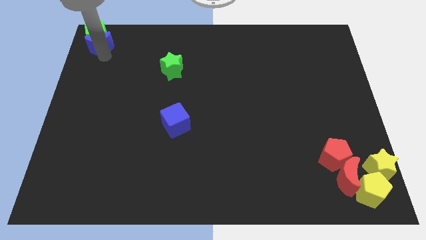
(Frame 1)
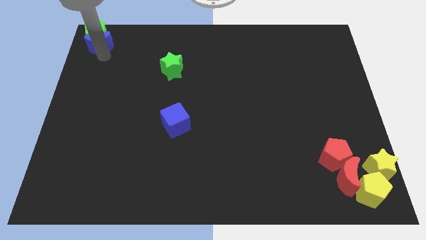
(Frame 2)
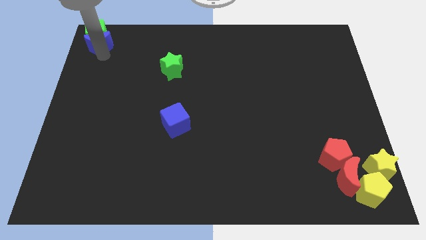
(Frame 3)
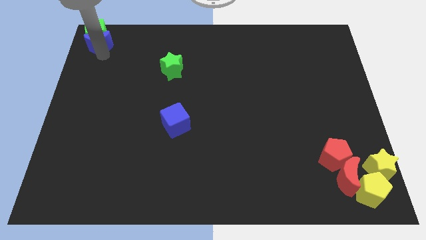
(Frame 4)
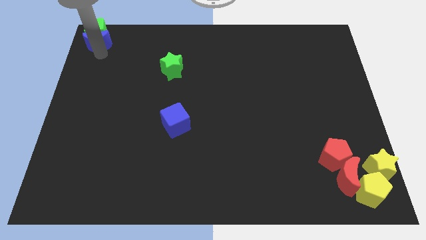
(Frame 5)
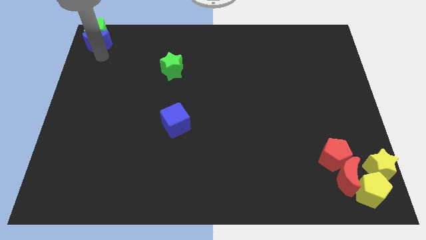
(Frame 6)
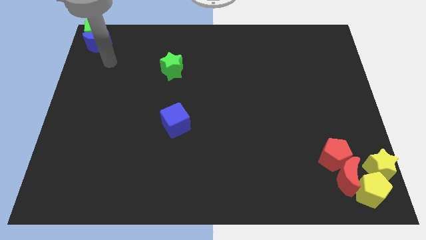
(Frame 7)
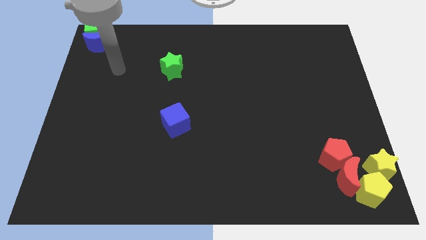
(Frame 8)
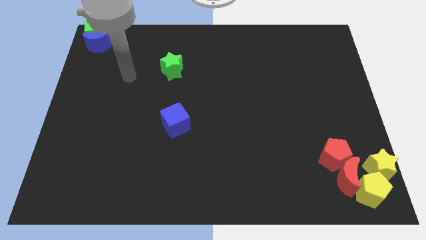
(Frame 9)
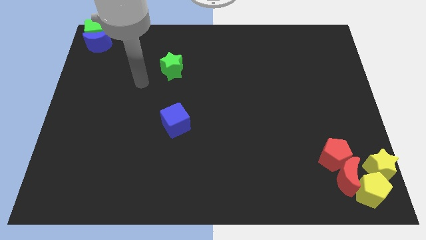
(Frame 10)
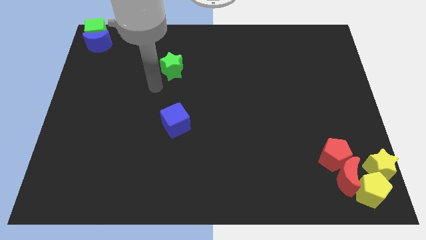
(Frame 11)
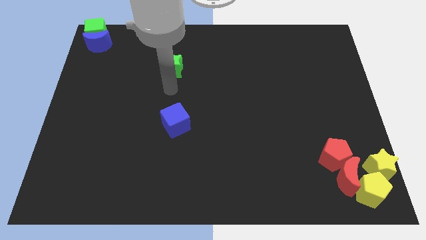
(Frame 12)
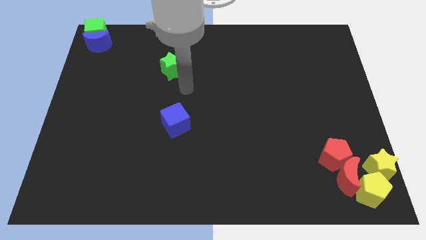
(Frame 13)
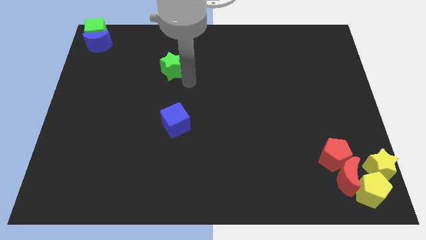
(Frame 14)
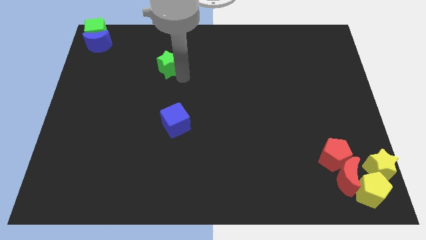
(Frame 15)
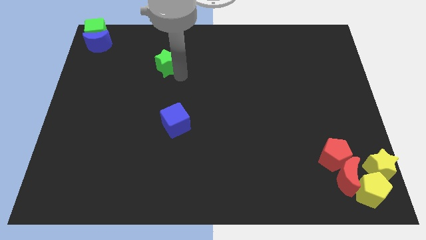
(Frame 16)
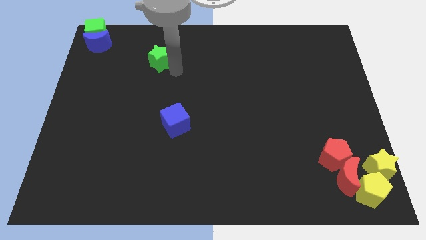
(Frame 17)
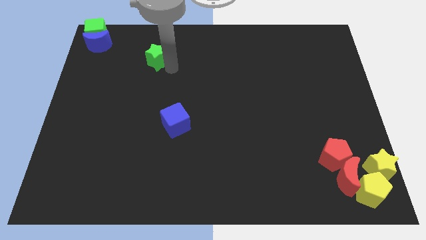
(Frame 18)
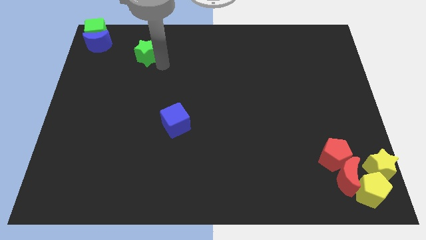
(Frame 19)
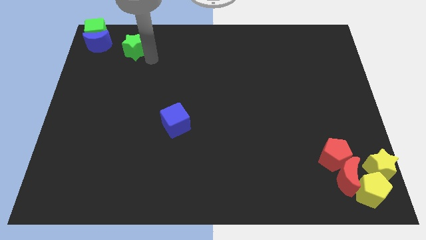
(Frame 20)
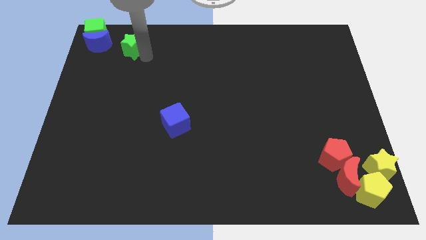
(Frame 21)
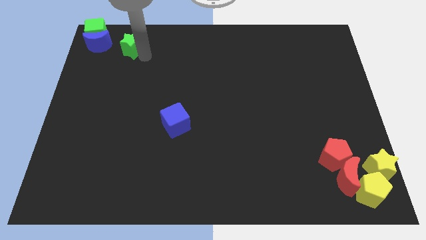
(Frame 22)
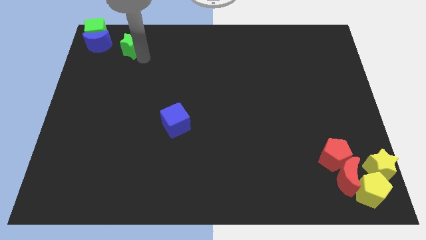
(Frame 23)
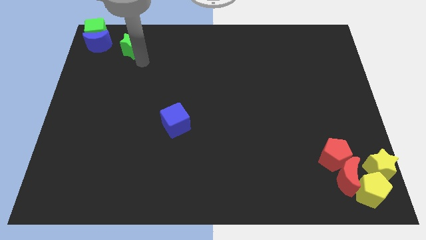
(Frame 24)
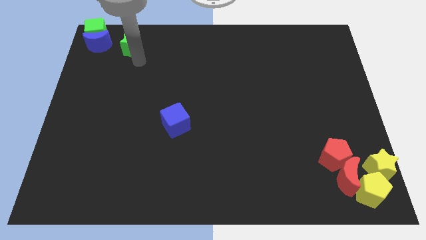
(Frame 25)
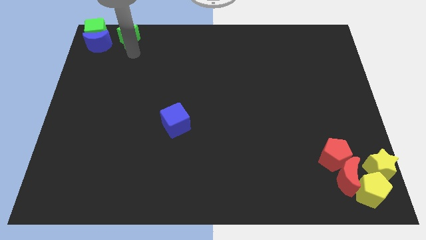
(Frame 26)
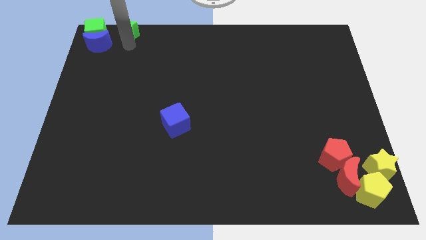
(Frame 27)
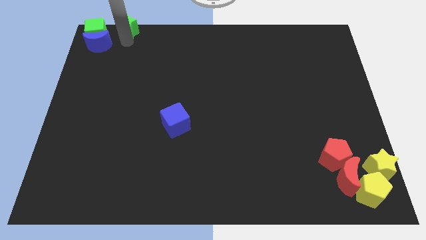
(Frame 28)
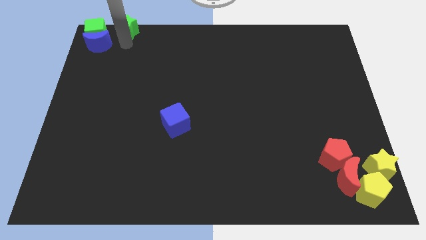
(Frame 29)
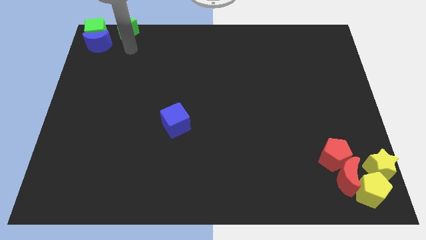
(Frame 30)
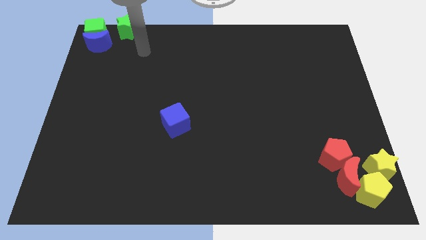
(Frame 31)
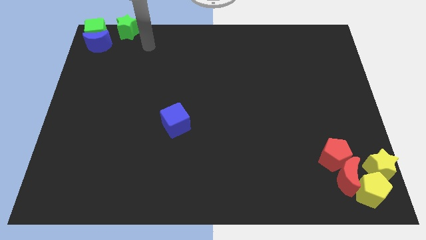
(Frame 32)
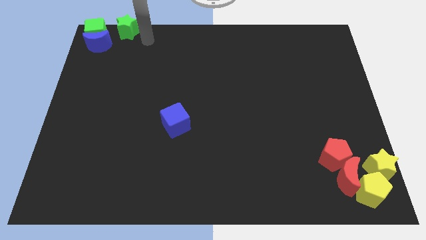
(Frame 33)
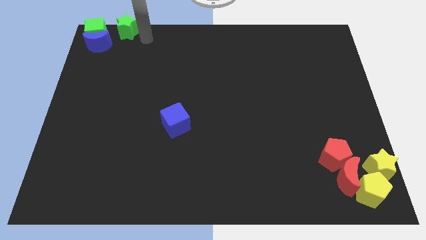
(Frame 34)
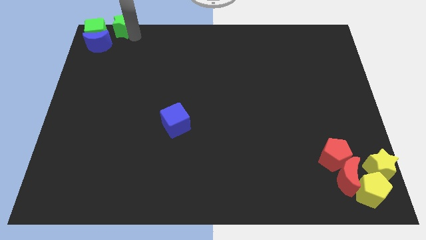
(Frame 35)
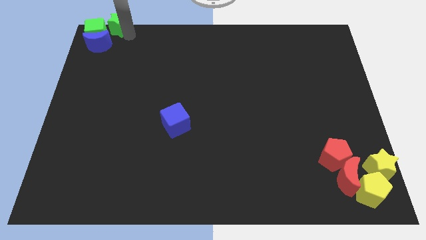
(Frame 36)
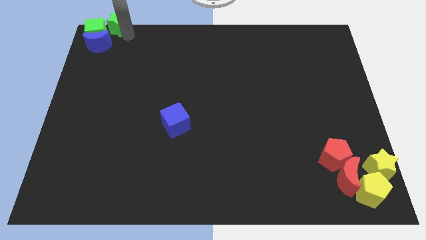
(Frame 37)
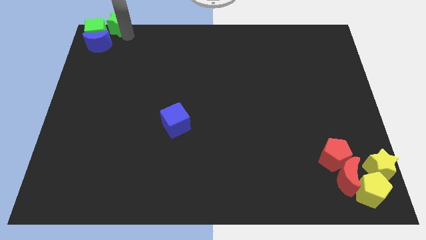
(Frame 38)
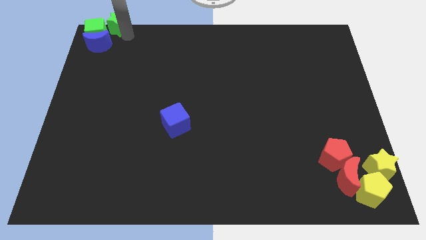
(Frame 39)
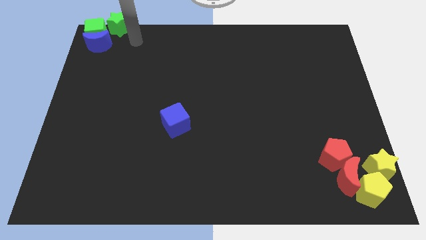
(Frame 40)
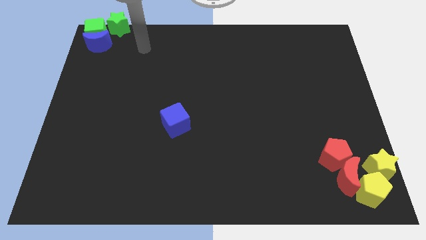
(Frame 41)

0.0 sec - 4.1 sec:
put the green star into the green cube

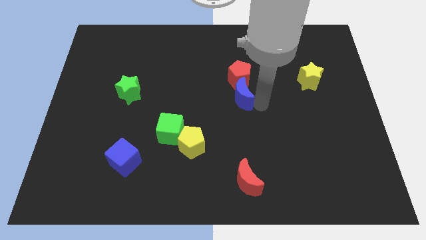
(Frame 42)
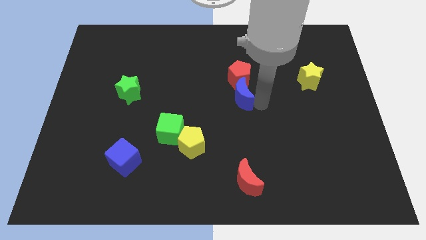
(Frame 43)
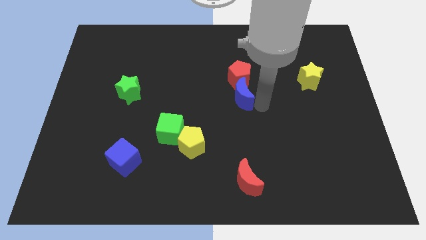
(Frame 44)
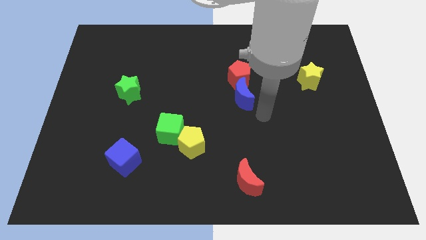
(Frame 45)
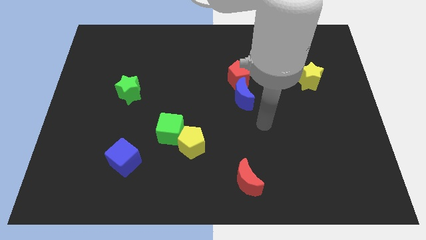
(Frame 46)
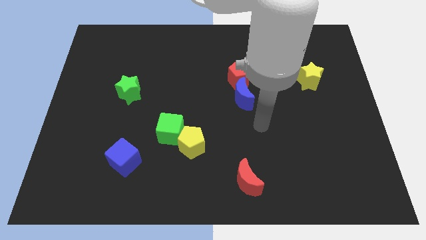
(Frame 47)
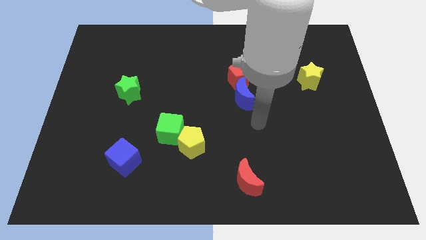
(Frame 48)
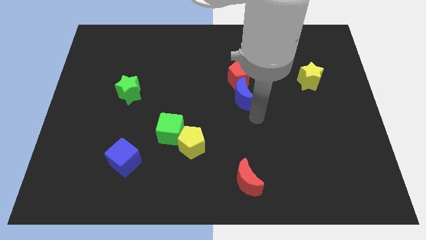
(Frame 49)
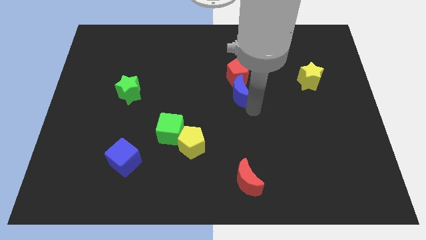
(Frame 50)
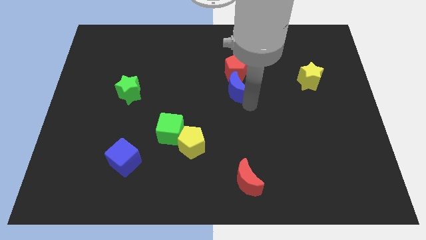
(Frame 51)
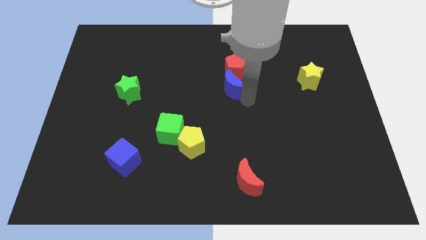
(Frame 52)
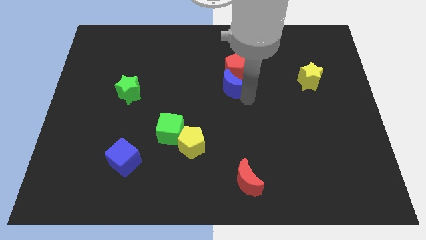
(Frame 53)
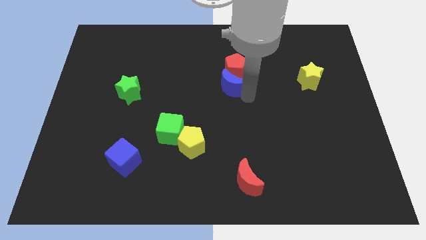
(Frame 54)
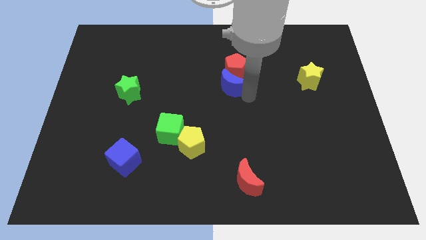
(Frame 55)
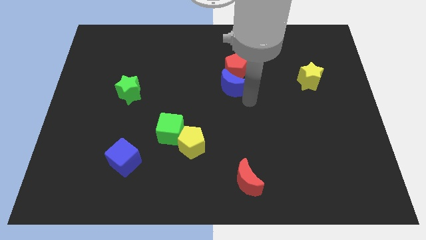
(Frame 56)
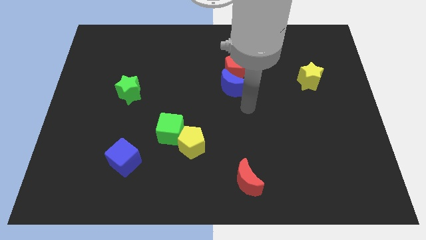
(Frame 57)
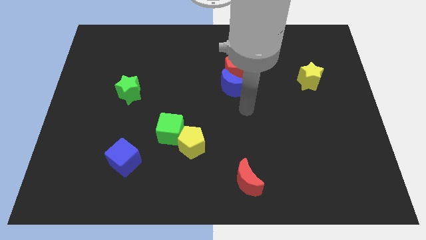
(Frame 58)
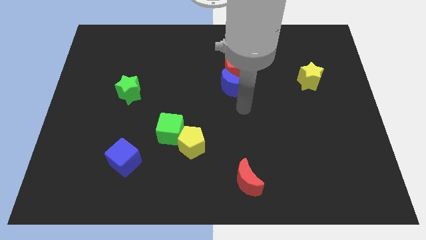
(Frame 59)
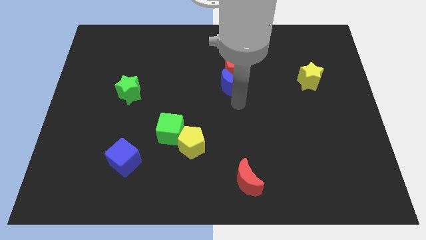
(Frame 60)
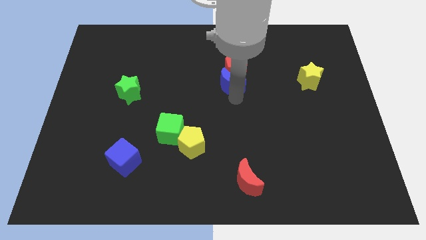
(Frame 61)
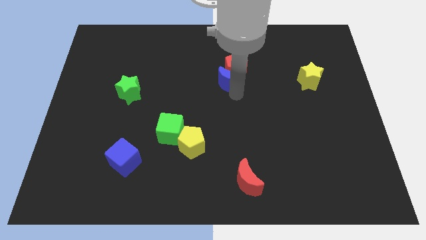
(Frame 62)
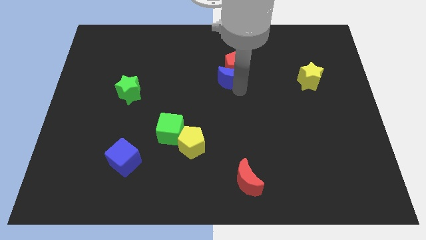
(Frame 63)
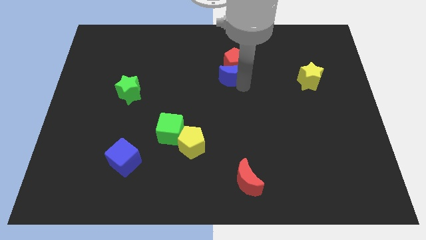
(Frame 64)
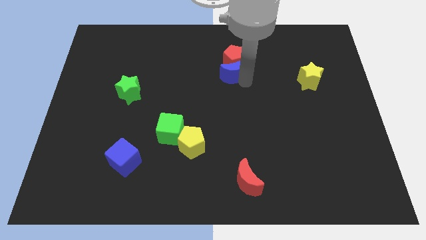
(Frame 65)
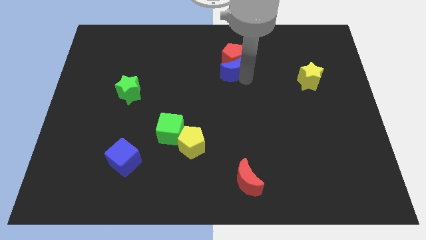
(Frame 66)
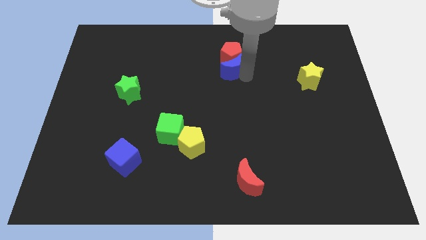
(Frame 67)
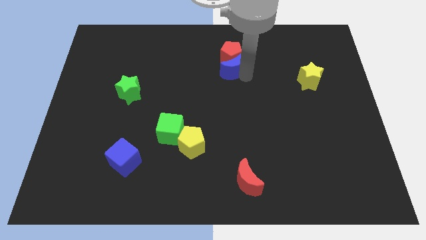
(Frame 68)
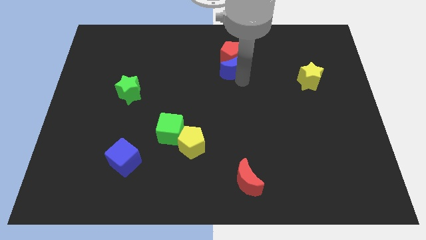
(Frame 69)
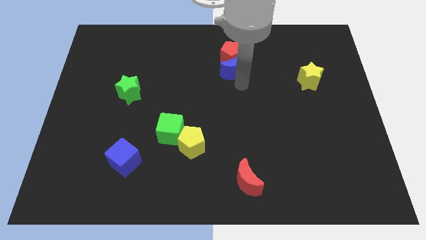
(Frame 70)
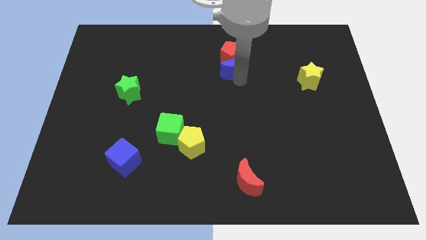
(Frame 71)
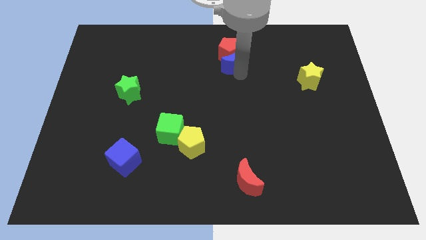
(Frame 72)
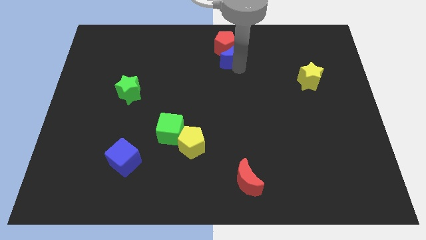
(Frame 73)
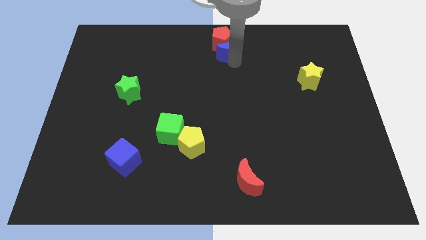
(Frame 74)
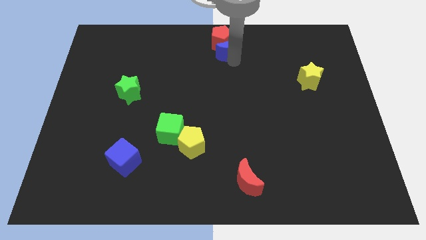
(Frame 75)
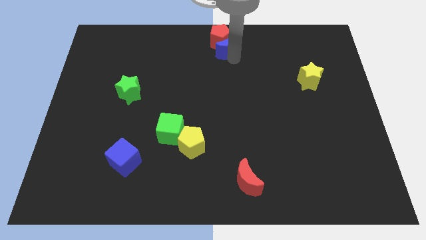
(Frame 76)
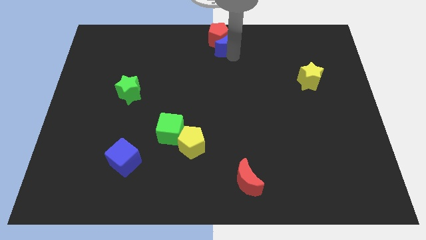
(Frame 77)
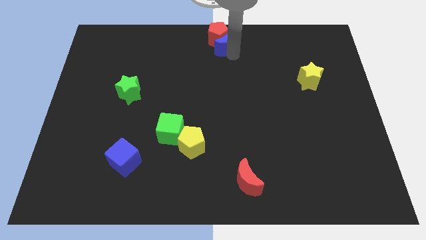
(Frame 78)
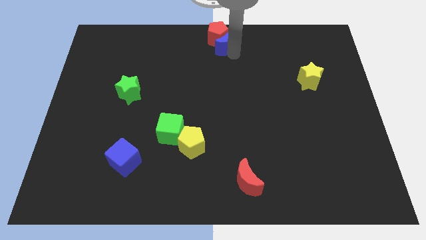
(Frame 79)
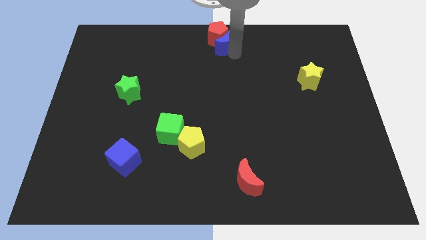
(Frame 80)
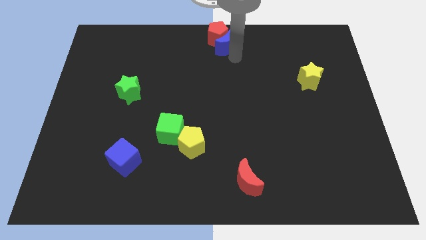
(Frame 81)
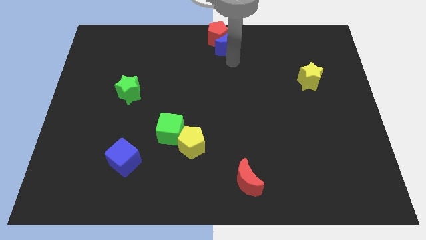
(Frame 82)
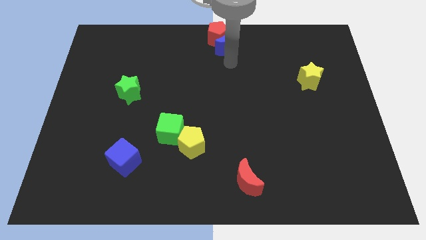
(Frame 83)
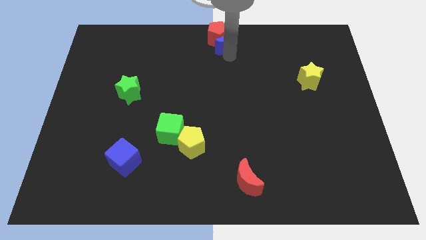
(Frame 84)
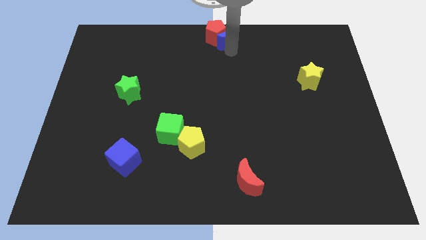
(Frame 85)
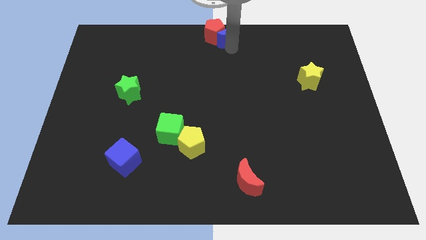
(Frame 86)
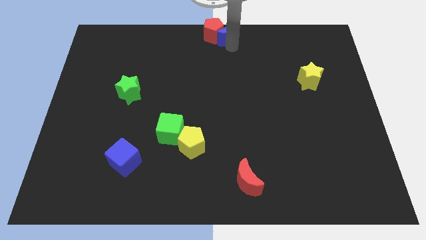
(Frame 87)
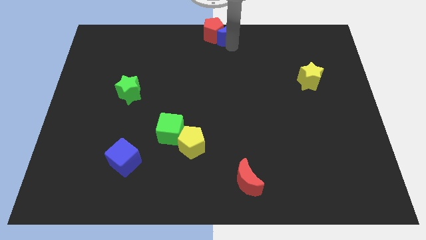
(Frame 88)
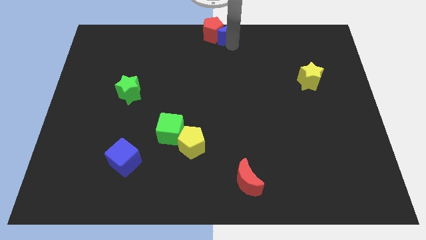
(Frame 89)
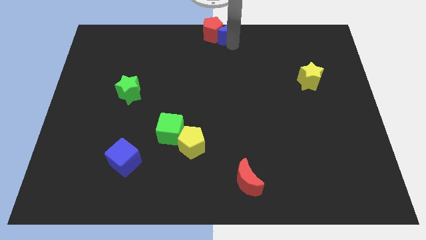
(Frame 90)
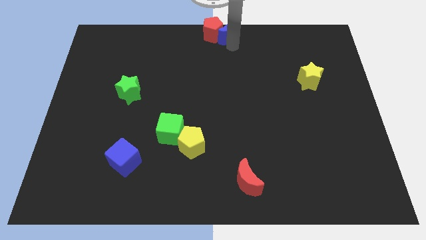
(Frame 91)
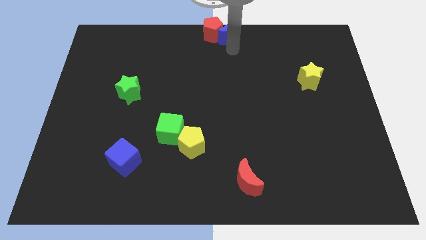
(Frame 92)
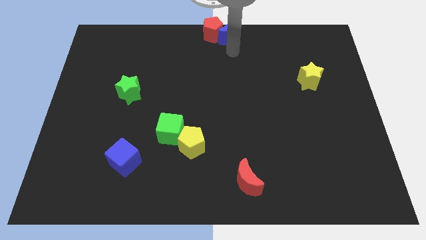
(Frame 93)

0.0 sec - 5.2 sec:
push the red pentagon and the blue crescent at the top center of the board
